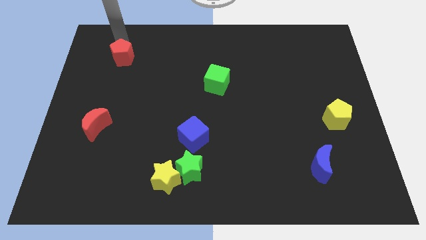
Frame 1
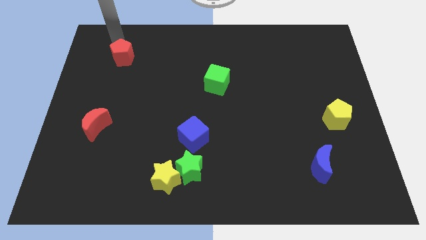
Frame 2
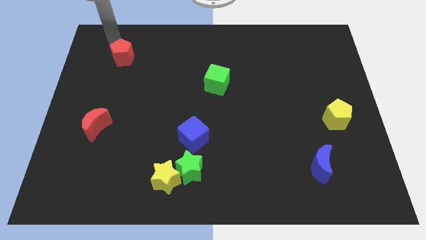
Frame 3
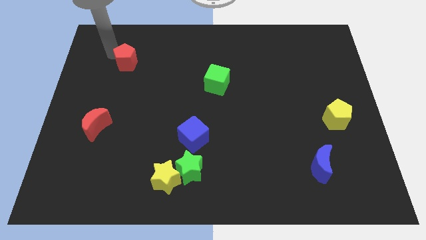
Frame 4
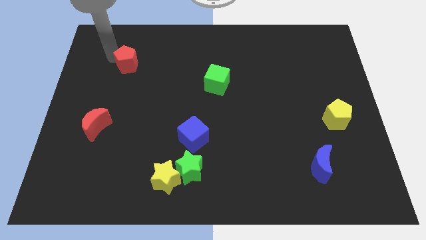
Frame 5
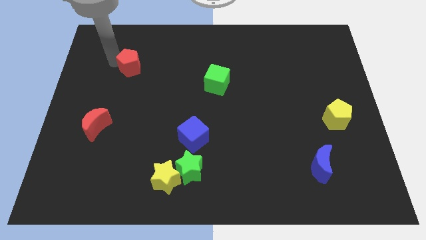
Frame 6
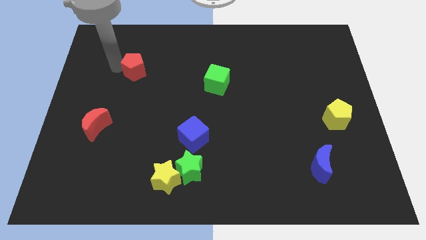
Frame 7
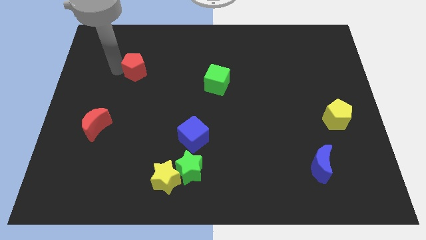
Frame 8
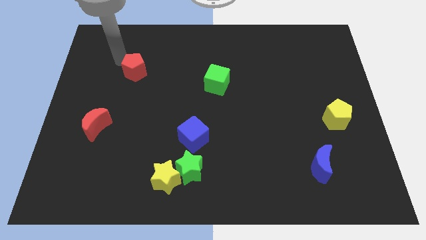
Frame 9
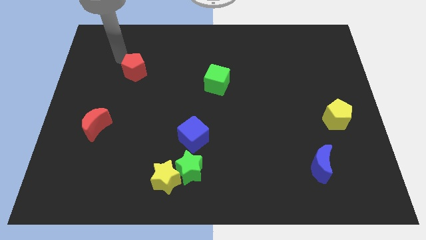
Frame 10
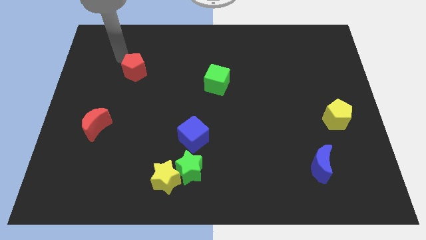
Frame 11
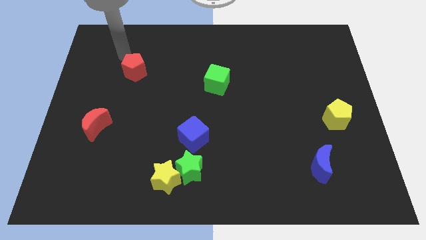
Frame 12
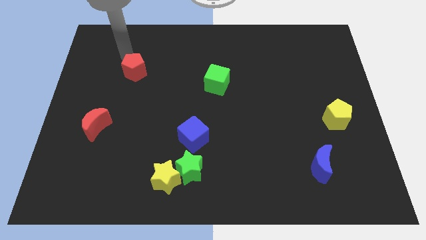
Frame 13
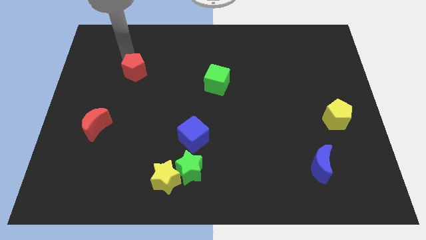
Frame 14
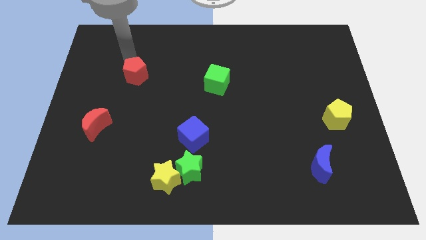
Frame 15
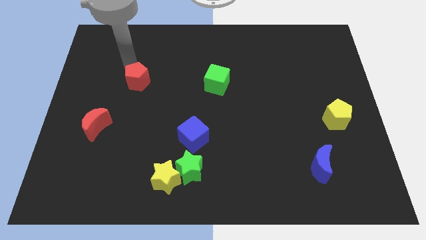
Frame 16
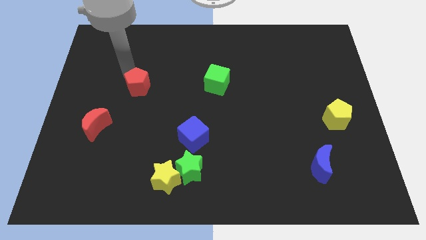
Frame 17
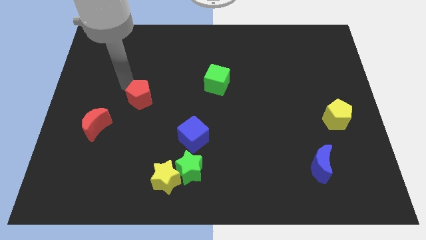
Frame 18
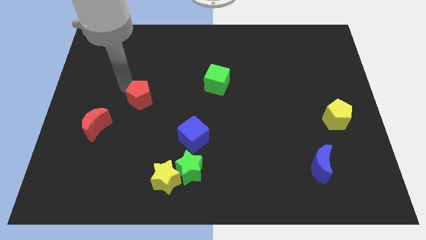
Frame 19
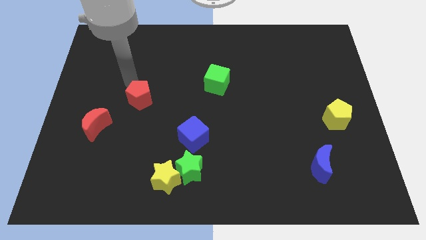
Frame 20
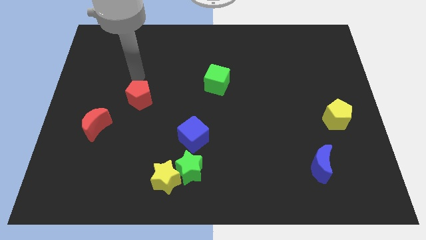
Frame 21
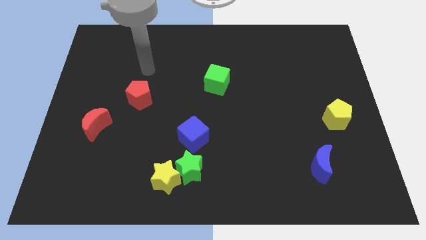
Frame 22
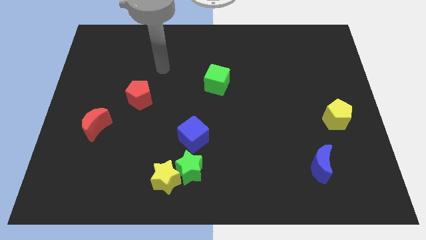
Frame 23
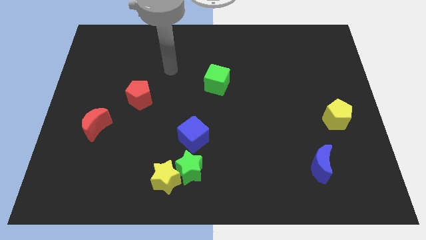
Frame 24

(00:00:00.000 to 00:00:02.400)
place the red pentagon diagonally to blue cube

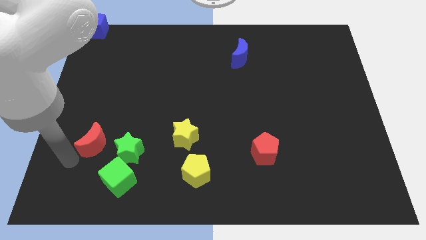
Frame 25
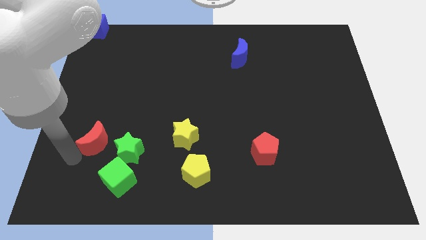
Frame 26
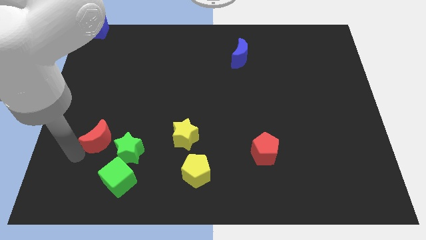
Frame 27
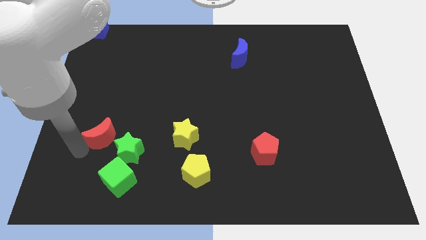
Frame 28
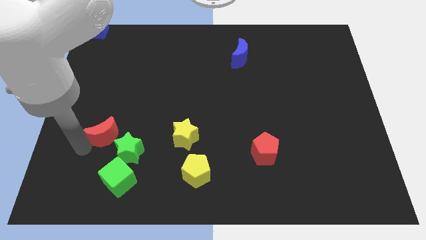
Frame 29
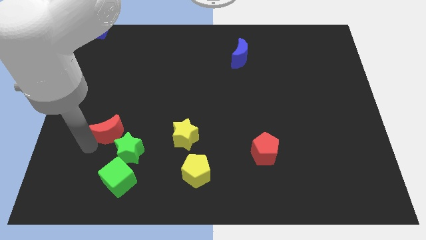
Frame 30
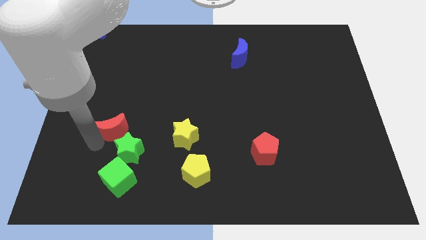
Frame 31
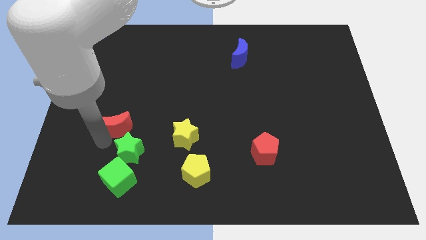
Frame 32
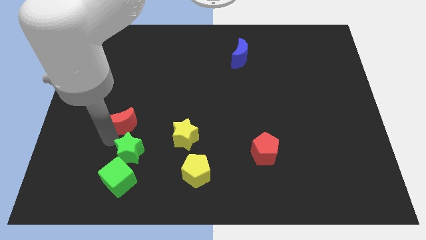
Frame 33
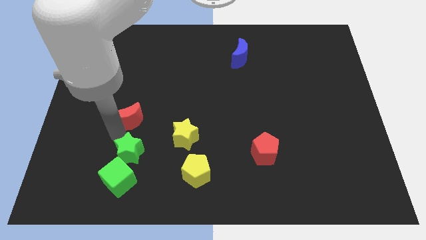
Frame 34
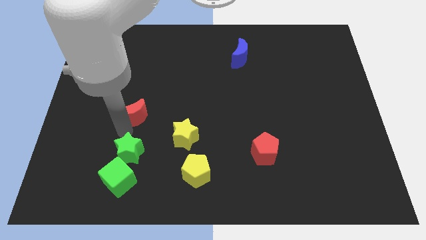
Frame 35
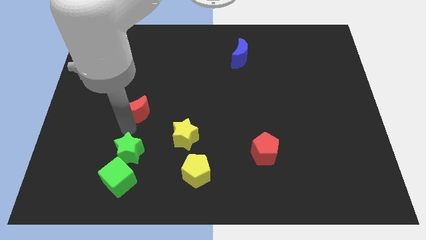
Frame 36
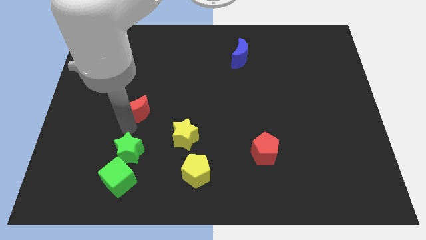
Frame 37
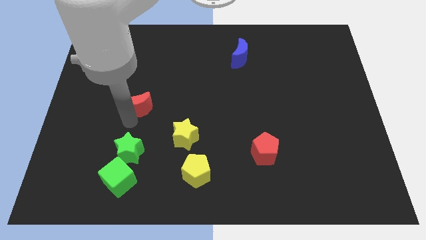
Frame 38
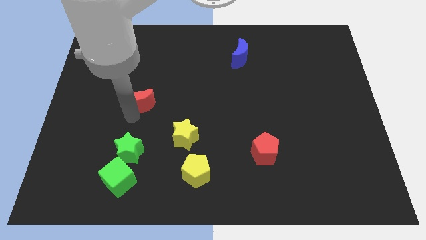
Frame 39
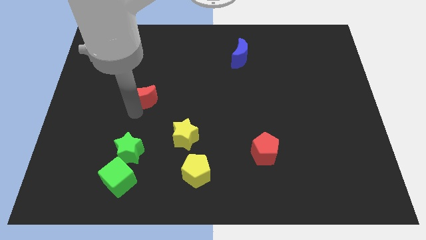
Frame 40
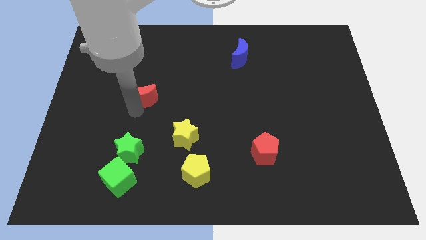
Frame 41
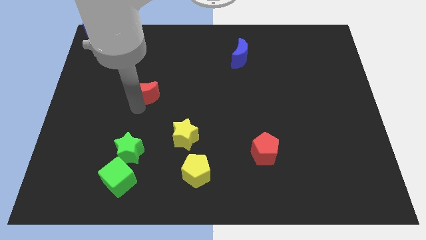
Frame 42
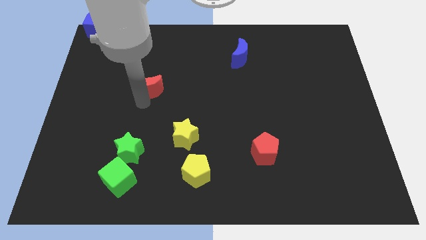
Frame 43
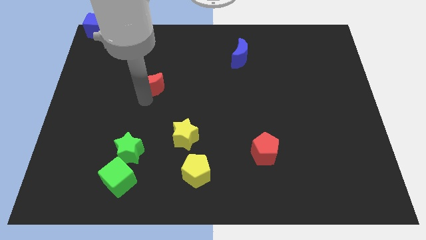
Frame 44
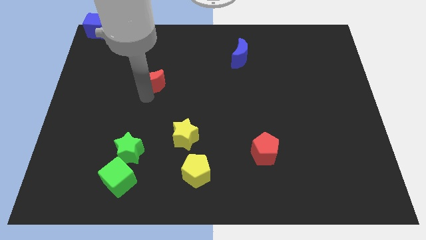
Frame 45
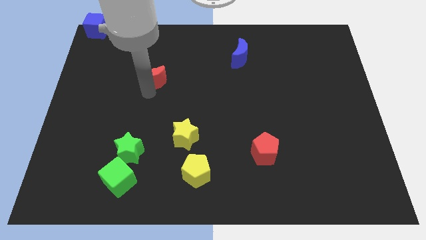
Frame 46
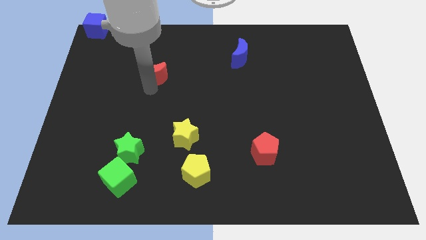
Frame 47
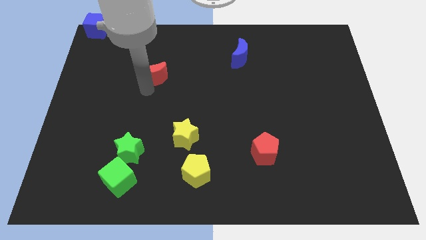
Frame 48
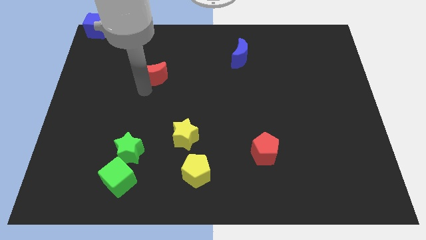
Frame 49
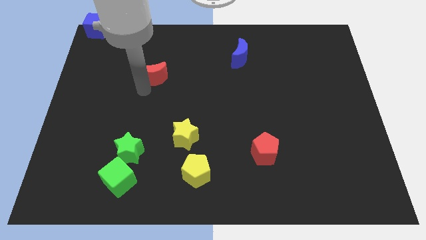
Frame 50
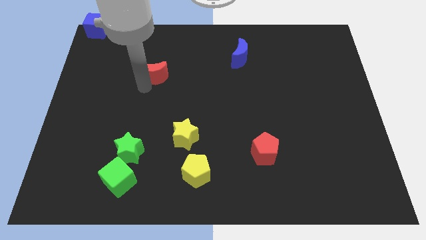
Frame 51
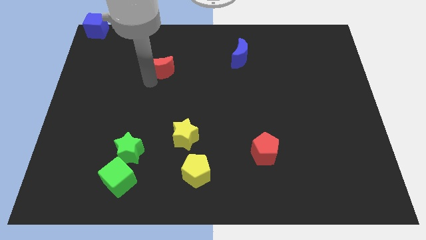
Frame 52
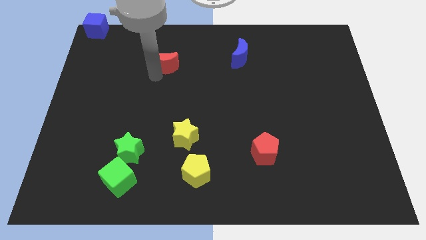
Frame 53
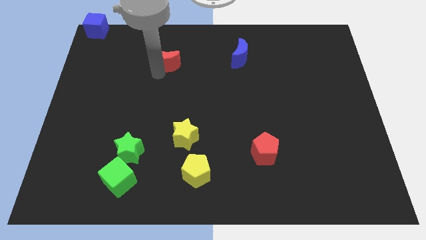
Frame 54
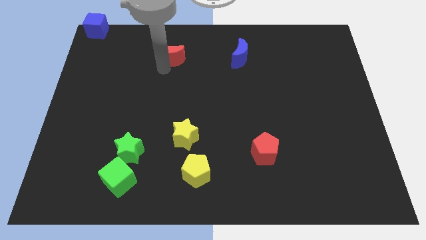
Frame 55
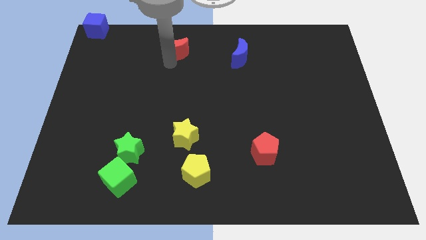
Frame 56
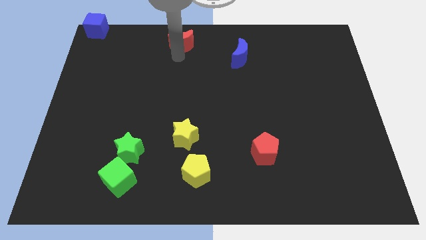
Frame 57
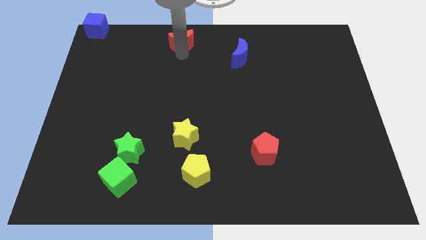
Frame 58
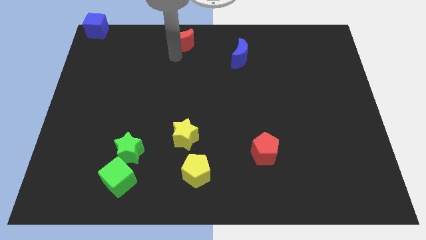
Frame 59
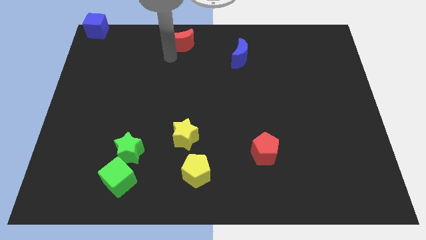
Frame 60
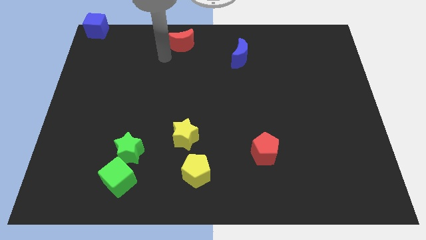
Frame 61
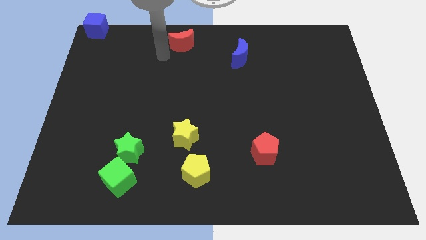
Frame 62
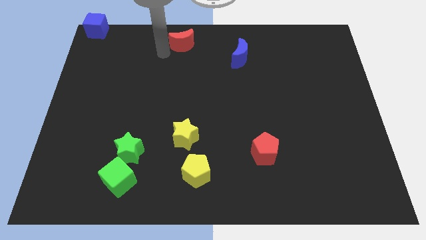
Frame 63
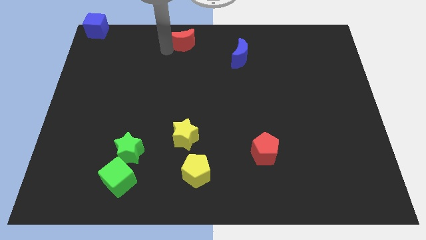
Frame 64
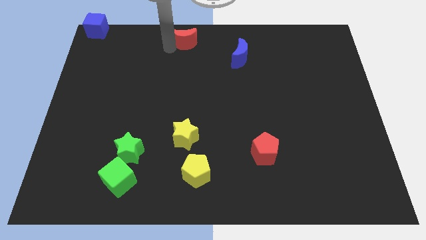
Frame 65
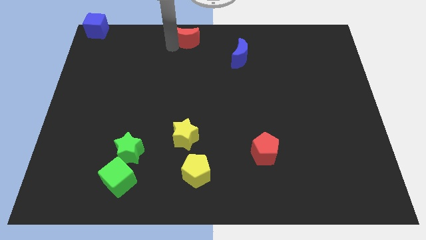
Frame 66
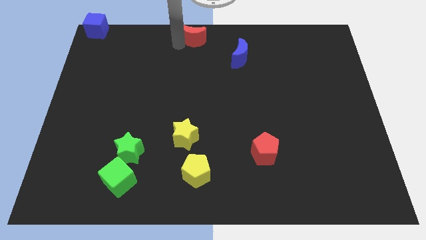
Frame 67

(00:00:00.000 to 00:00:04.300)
push the red crescent vertically to the top side of the yellow star

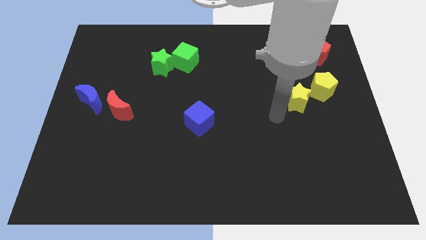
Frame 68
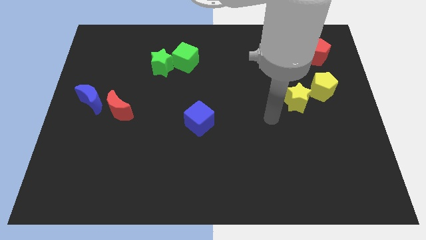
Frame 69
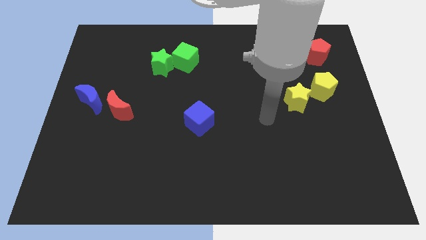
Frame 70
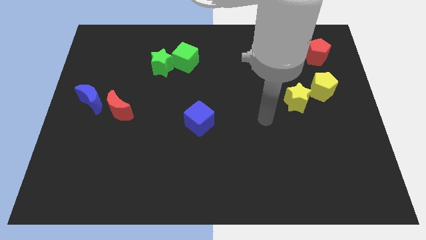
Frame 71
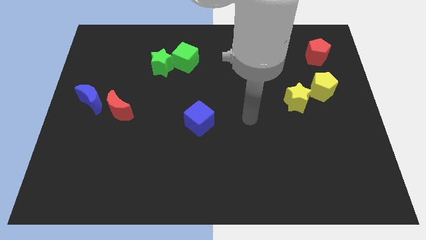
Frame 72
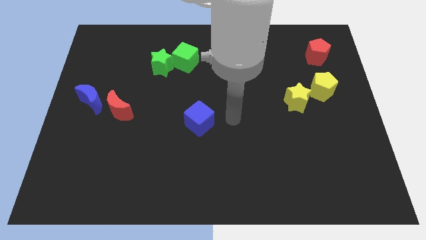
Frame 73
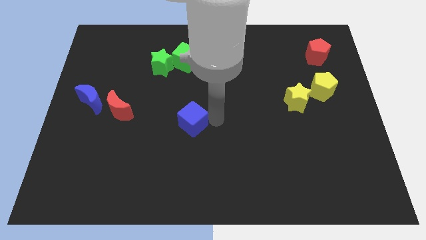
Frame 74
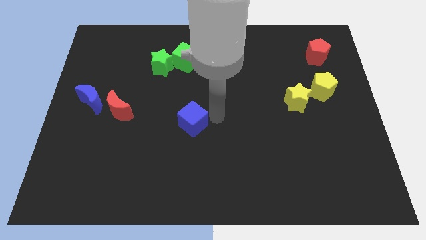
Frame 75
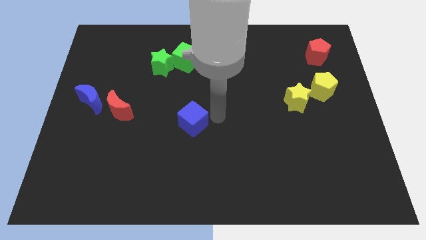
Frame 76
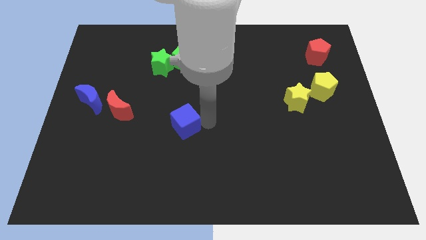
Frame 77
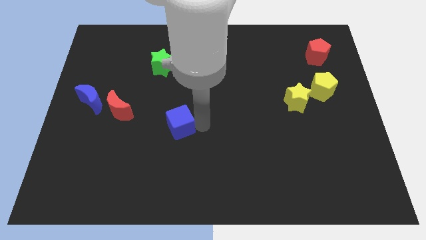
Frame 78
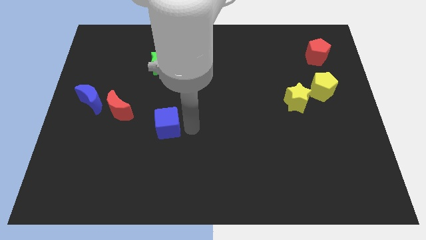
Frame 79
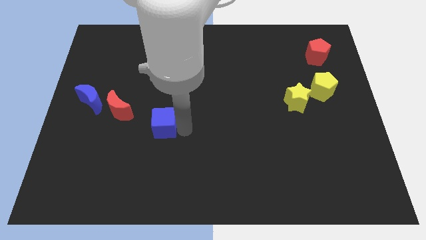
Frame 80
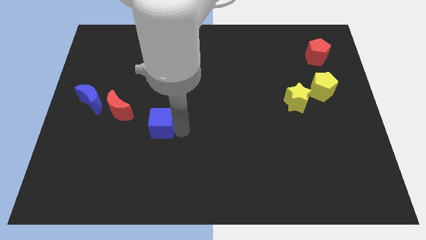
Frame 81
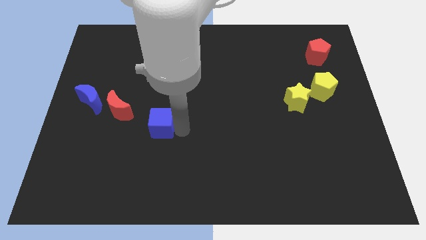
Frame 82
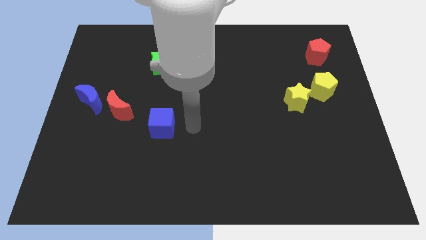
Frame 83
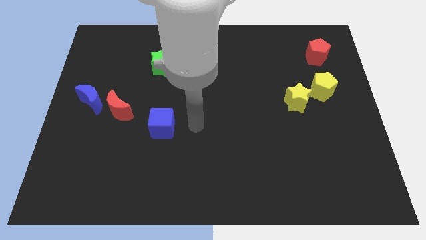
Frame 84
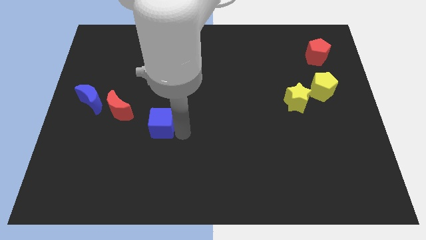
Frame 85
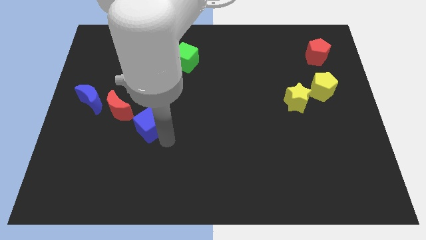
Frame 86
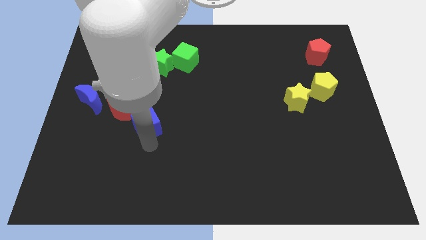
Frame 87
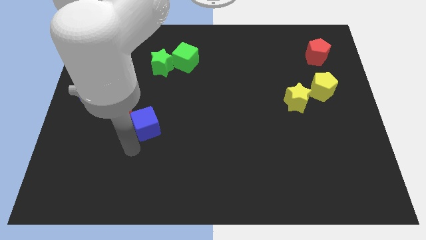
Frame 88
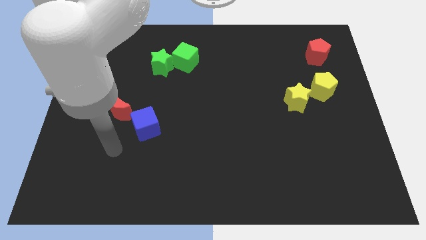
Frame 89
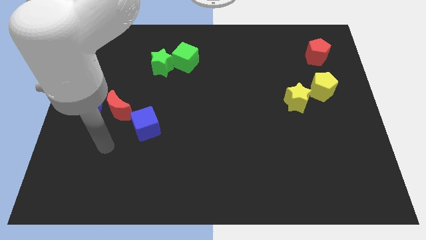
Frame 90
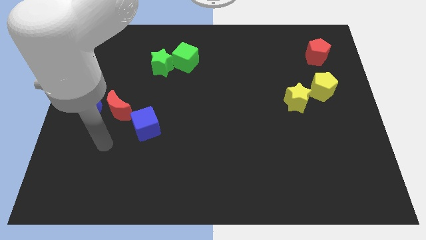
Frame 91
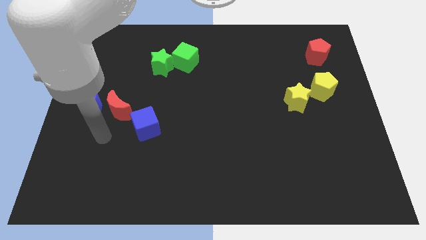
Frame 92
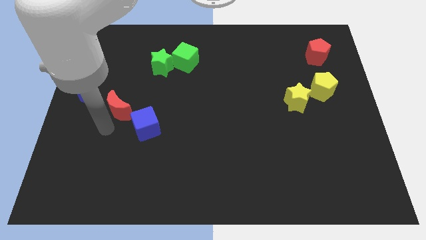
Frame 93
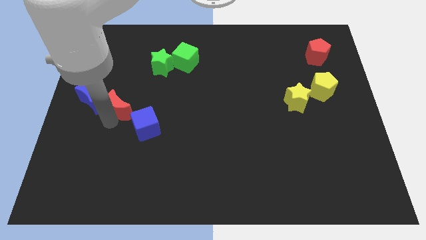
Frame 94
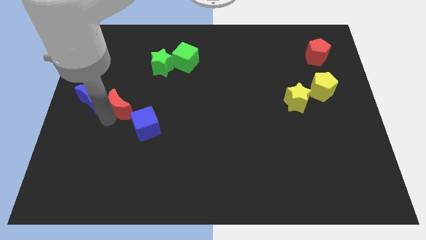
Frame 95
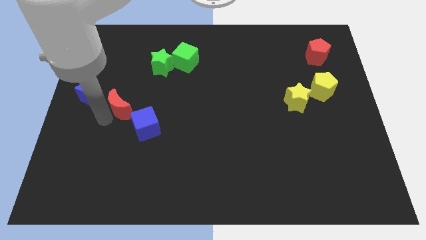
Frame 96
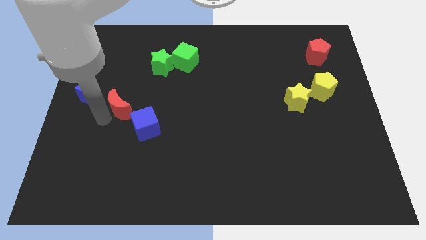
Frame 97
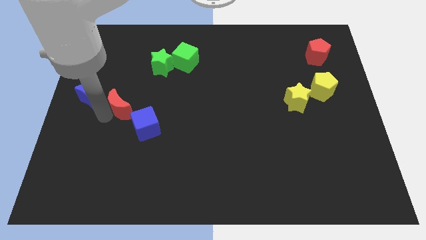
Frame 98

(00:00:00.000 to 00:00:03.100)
place blue cube to the bottom right of red moon
